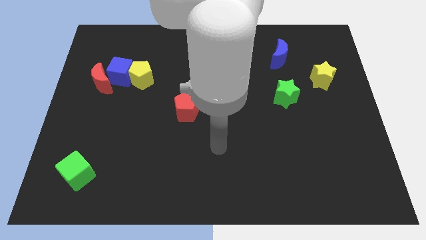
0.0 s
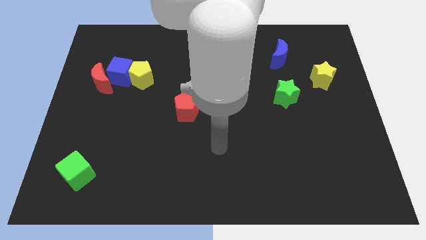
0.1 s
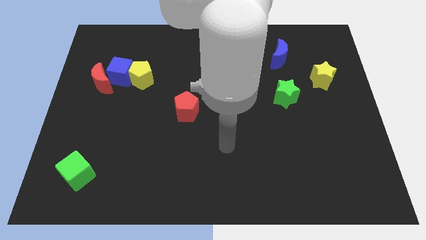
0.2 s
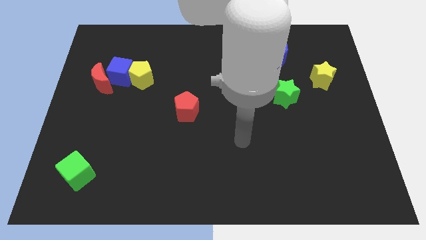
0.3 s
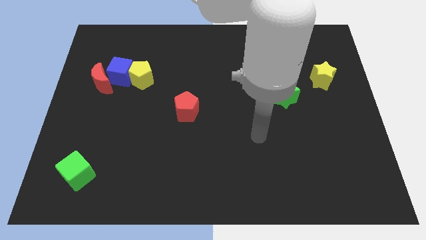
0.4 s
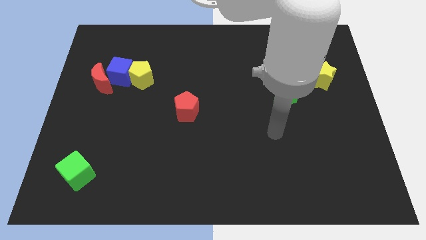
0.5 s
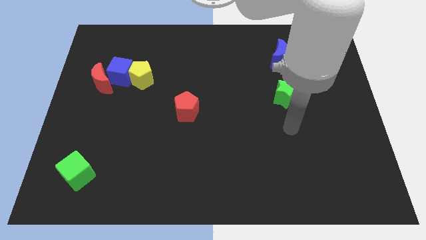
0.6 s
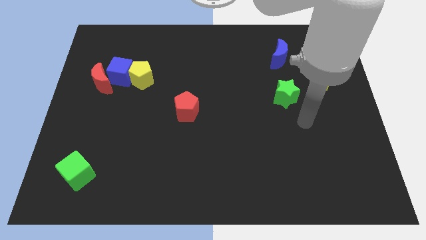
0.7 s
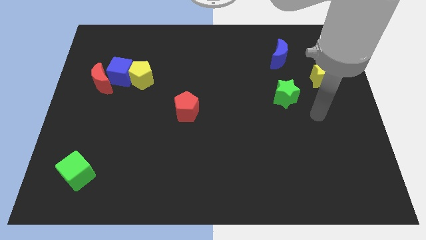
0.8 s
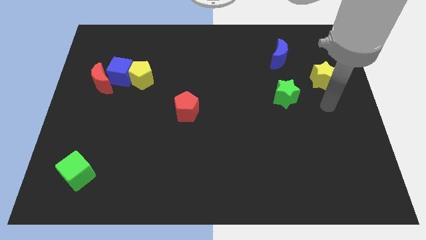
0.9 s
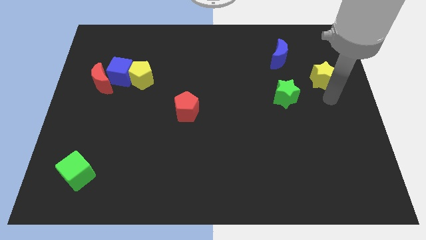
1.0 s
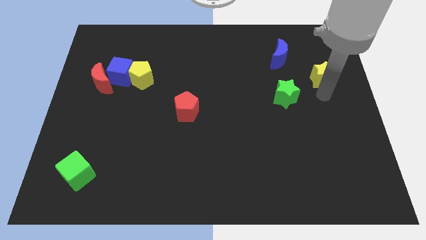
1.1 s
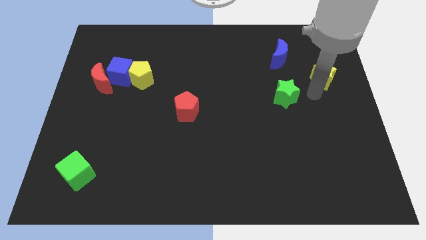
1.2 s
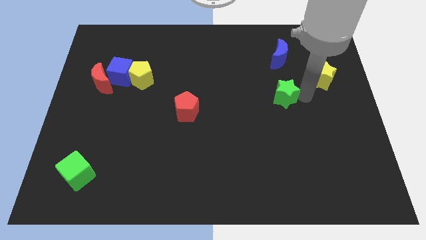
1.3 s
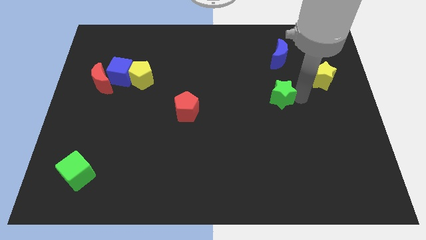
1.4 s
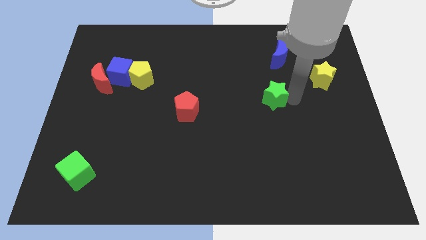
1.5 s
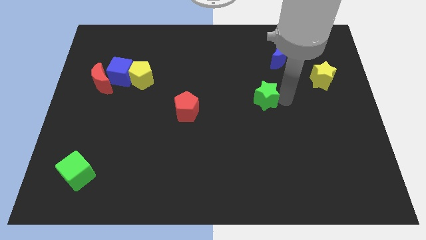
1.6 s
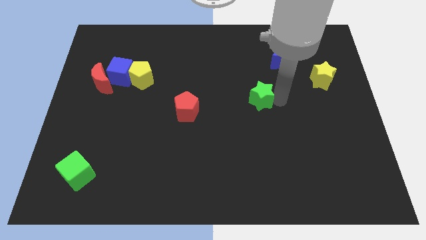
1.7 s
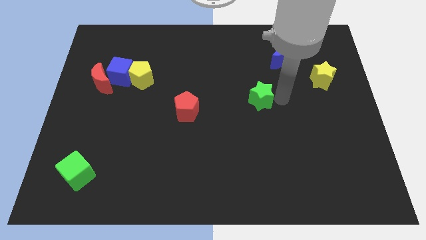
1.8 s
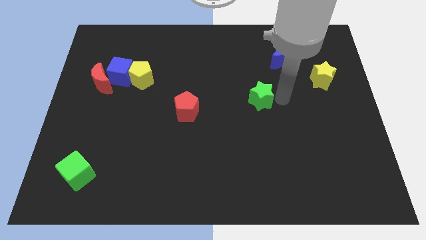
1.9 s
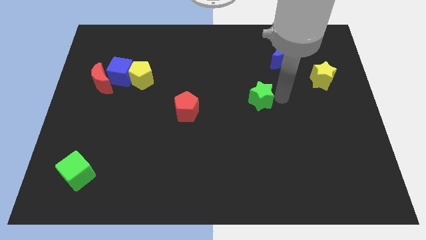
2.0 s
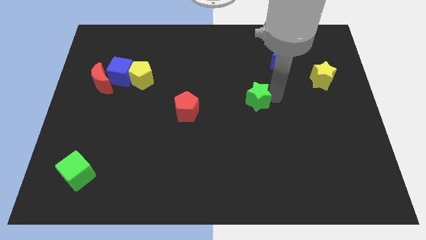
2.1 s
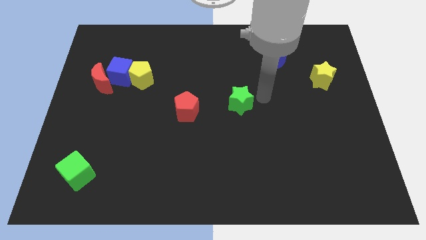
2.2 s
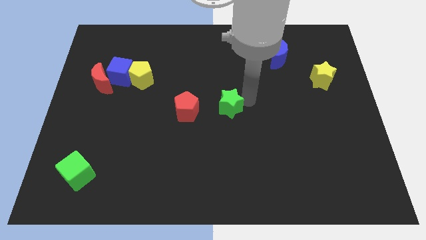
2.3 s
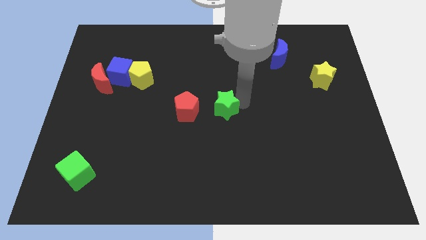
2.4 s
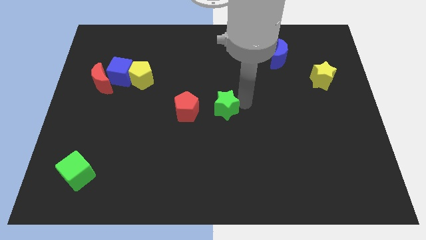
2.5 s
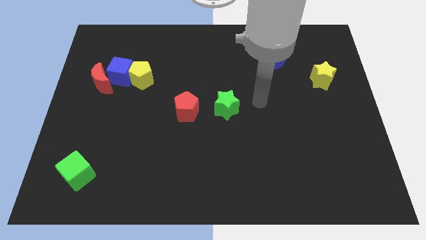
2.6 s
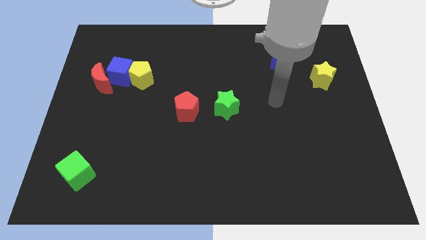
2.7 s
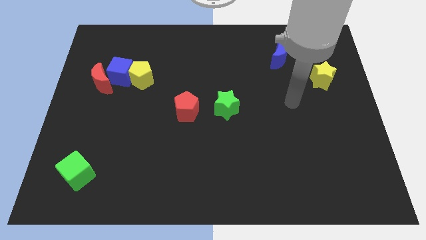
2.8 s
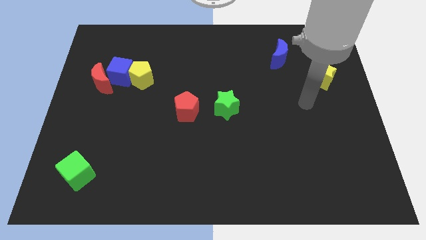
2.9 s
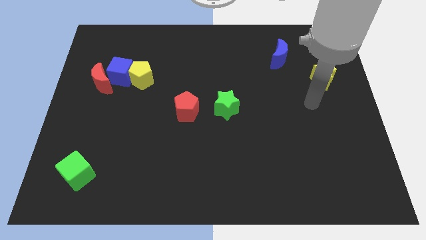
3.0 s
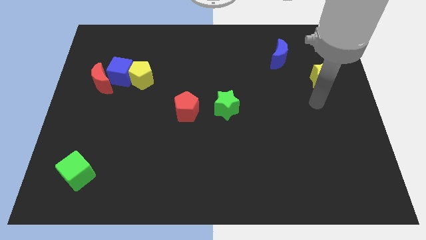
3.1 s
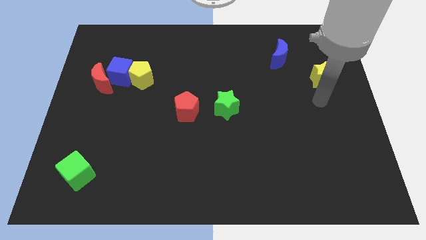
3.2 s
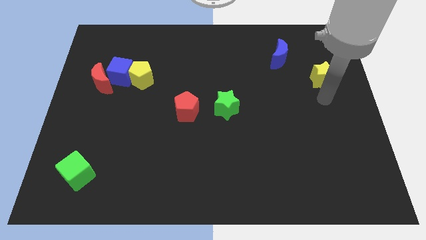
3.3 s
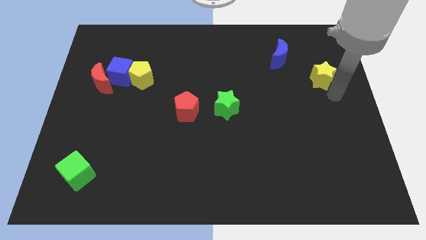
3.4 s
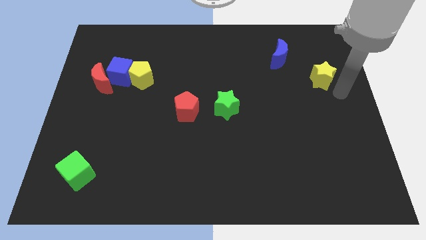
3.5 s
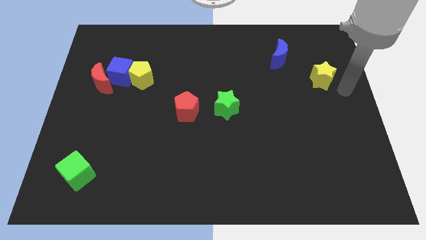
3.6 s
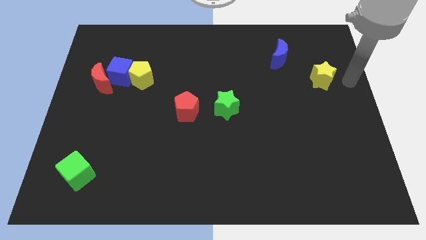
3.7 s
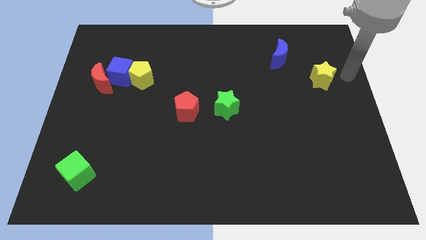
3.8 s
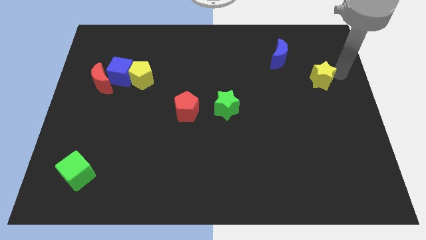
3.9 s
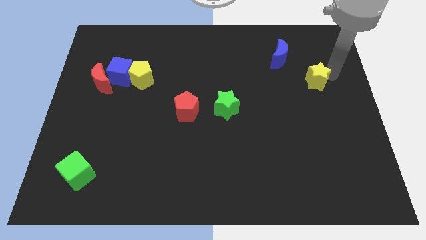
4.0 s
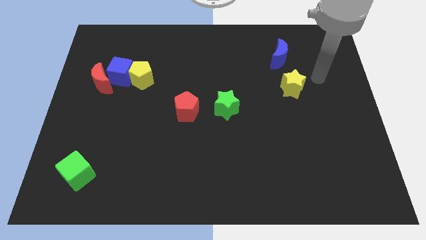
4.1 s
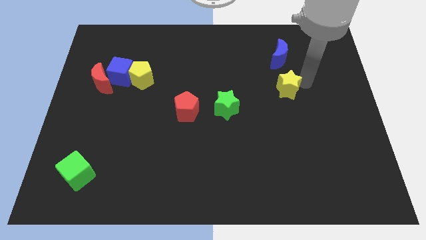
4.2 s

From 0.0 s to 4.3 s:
move the green star towards the red pentagon

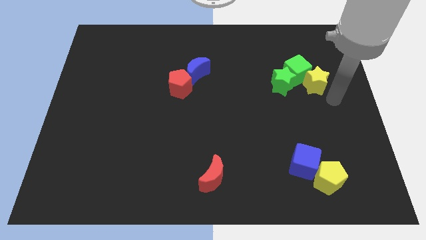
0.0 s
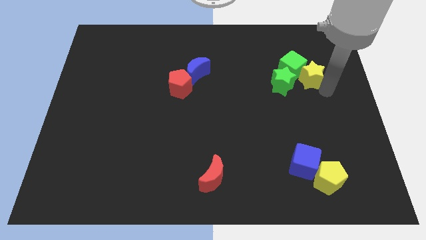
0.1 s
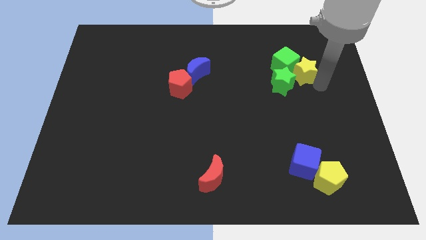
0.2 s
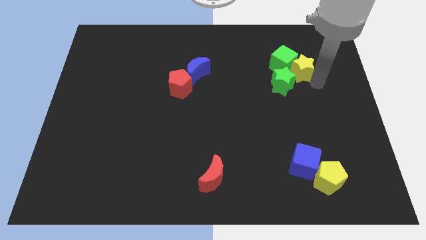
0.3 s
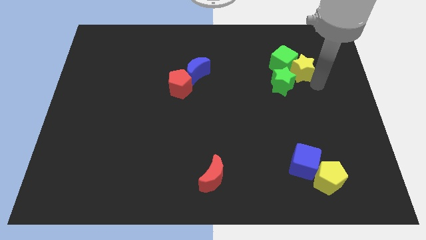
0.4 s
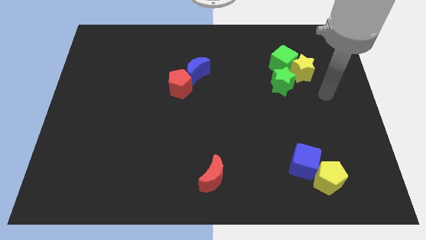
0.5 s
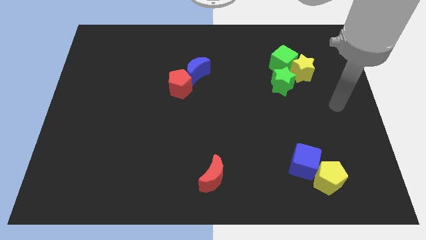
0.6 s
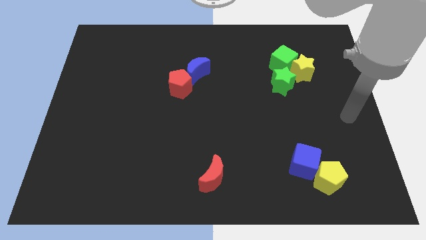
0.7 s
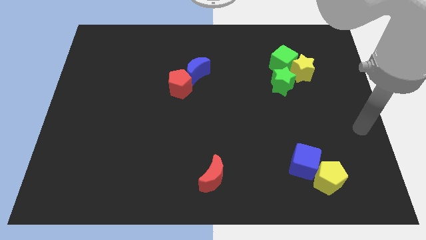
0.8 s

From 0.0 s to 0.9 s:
slightly push the yellow star and green cube upward

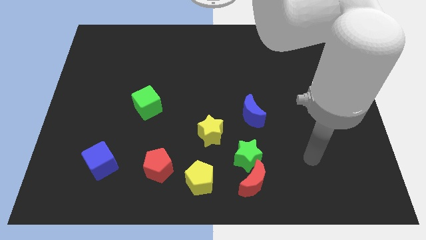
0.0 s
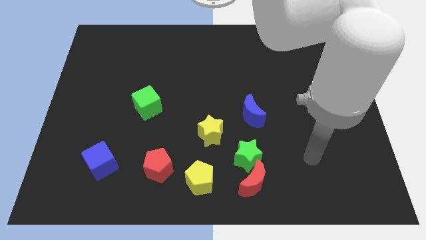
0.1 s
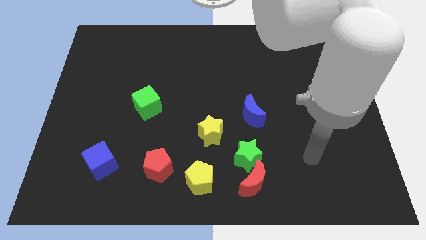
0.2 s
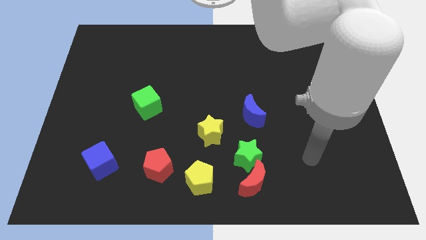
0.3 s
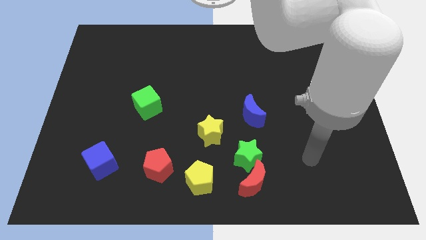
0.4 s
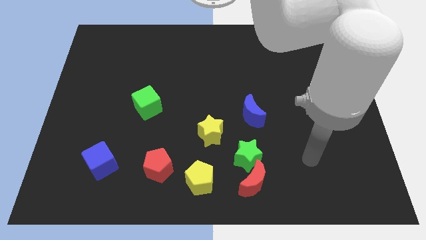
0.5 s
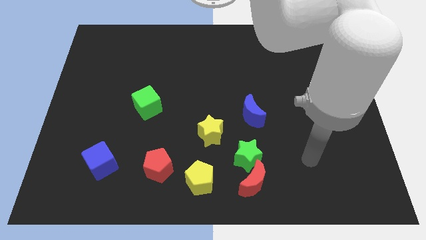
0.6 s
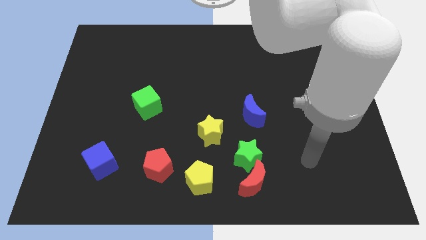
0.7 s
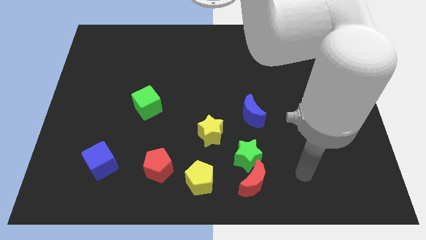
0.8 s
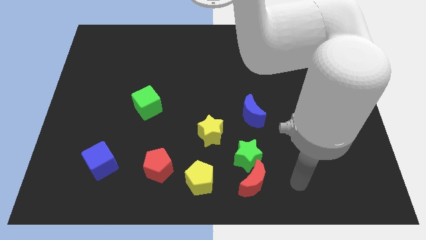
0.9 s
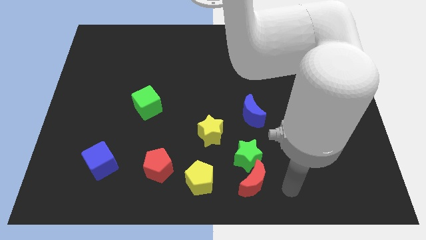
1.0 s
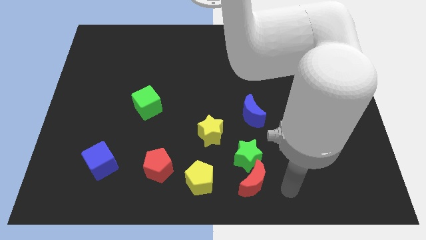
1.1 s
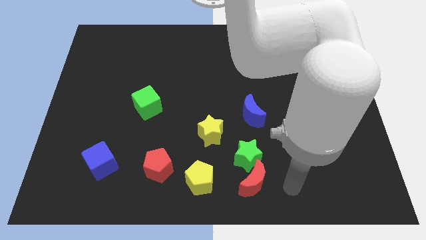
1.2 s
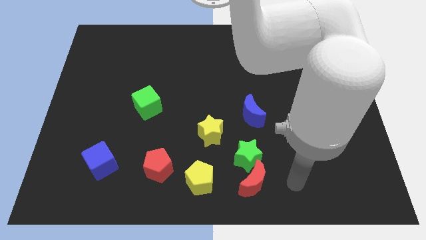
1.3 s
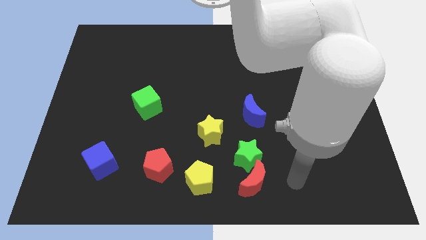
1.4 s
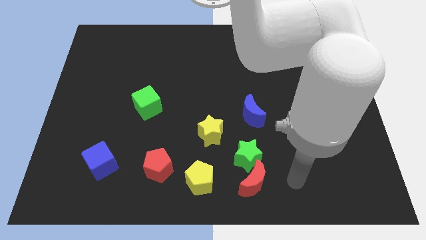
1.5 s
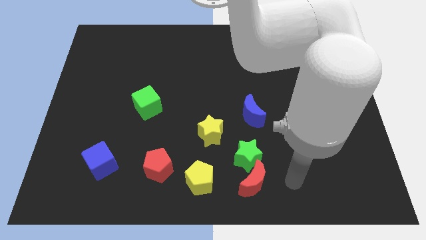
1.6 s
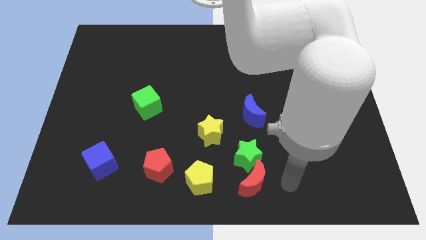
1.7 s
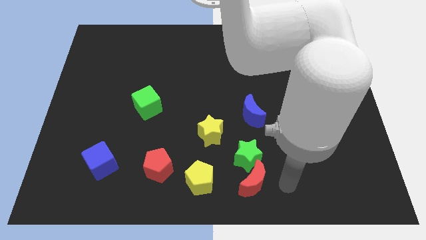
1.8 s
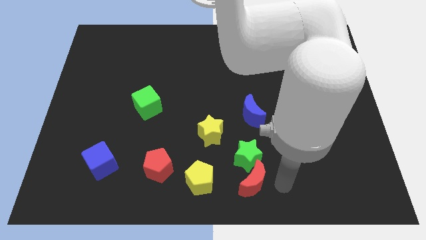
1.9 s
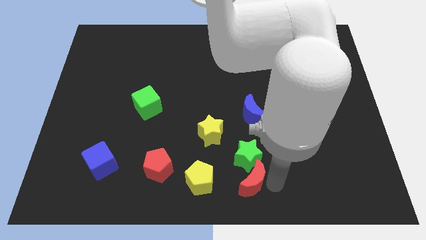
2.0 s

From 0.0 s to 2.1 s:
move your arm to the right of red crescent

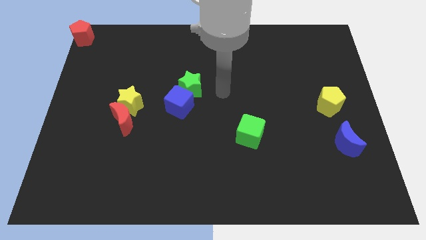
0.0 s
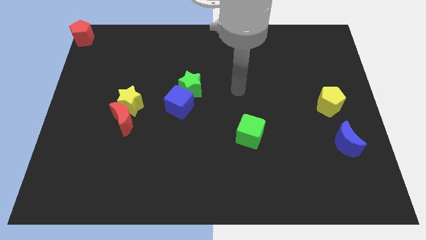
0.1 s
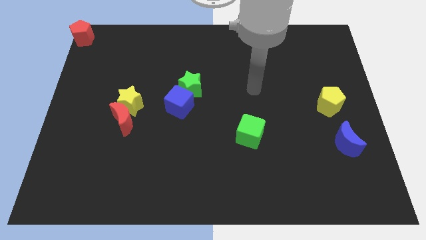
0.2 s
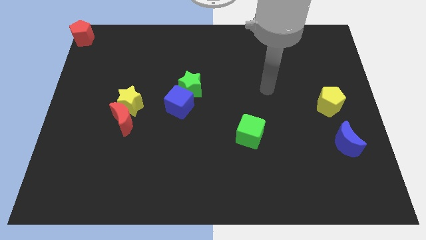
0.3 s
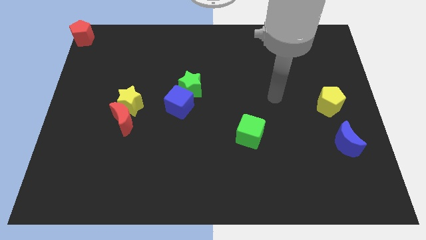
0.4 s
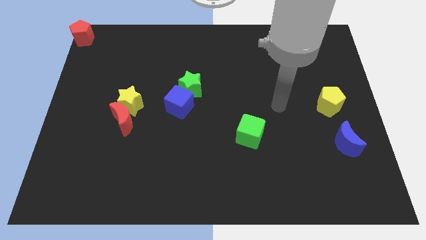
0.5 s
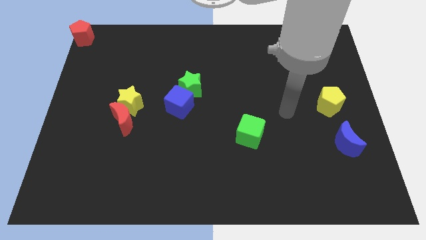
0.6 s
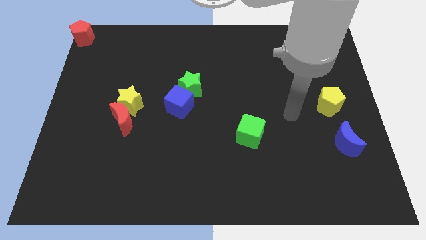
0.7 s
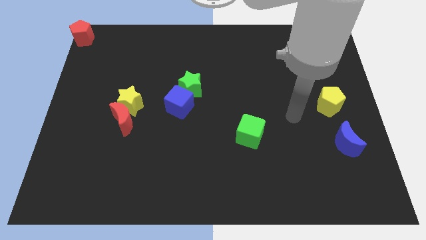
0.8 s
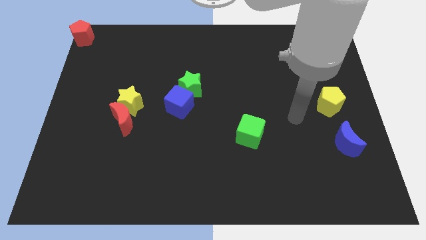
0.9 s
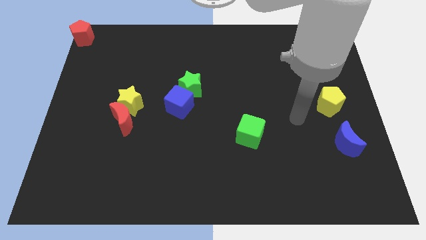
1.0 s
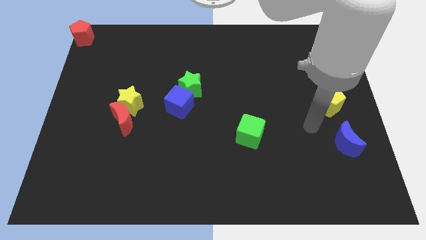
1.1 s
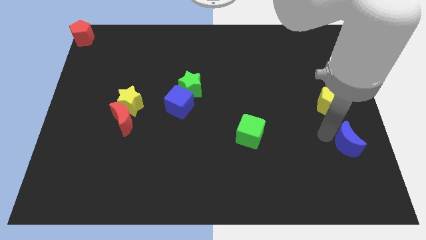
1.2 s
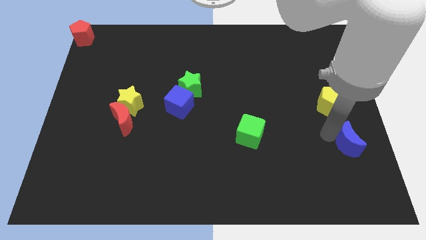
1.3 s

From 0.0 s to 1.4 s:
touch the left side of the blue crescent

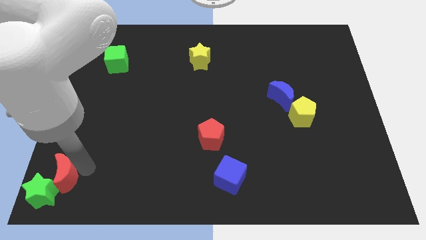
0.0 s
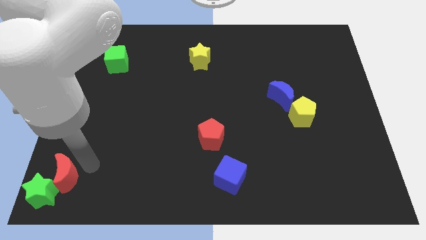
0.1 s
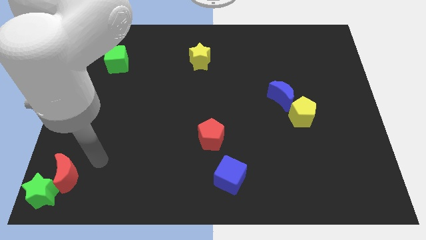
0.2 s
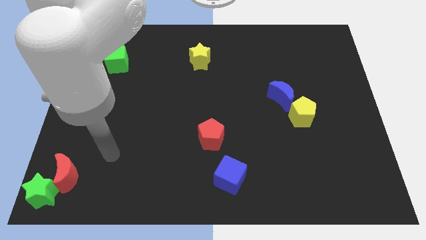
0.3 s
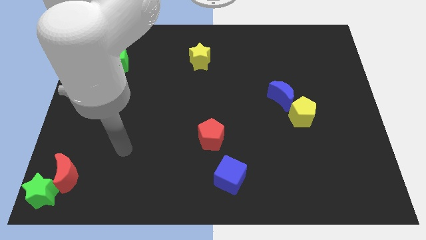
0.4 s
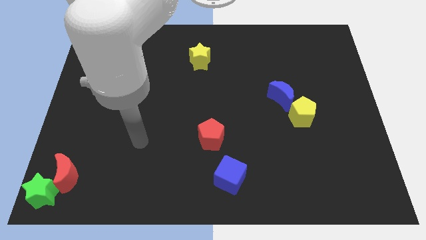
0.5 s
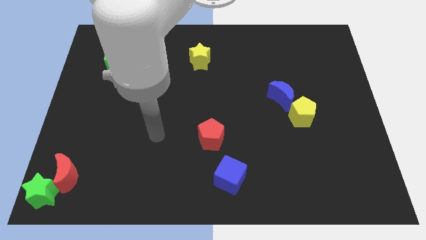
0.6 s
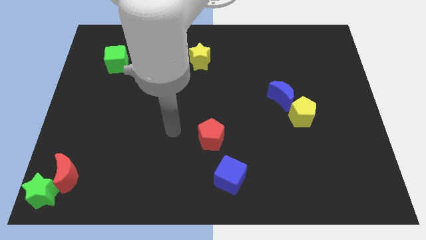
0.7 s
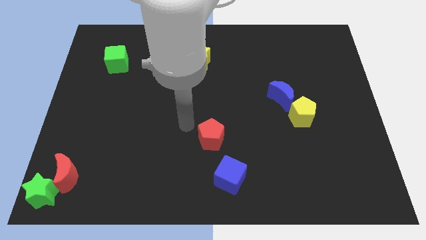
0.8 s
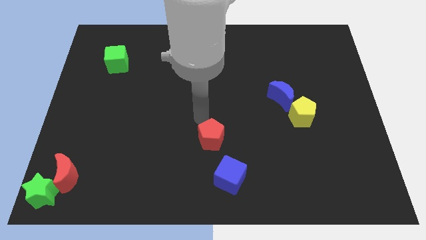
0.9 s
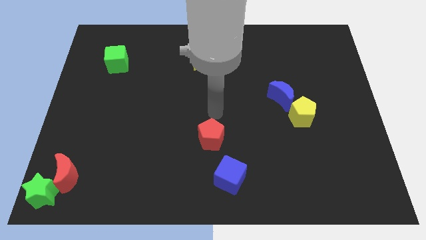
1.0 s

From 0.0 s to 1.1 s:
place your arm to the top of red pentagon
